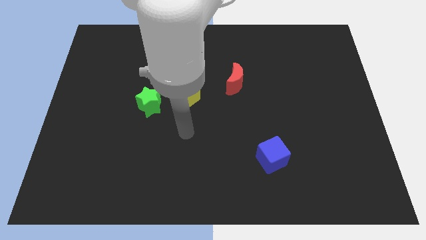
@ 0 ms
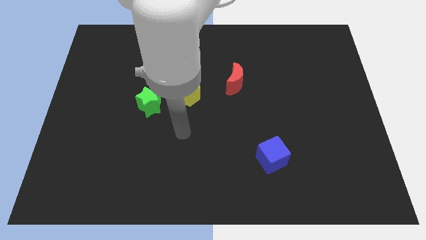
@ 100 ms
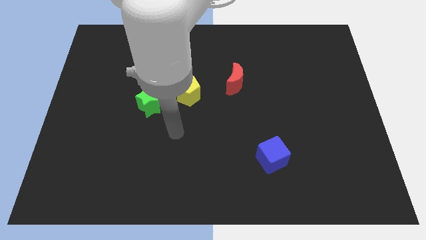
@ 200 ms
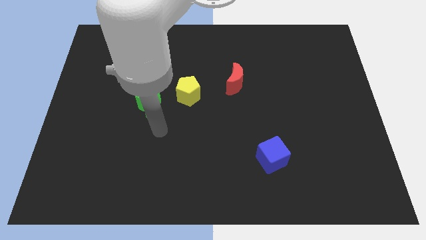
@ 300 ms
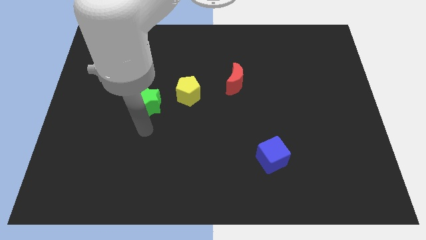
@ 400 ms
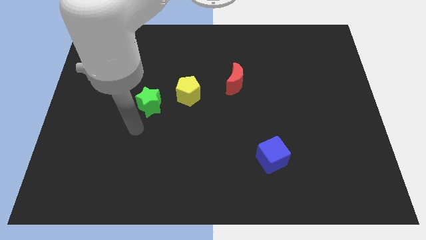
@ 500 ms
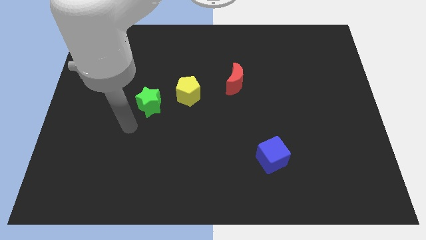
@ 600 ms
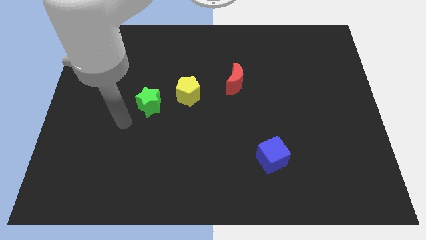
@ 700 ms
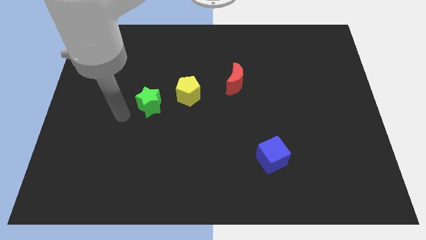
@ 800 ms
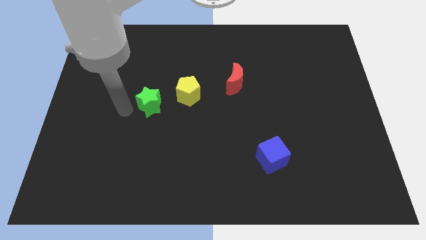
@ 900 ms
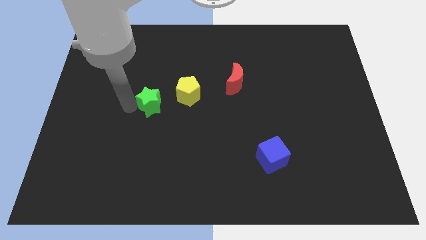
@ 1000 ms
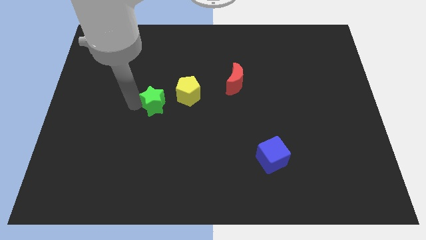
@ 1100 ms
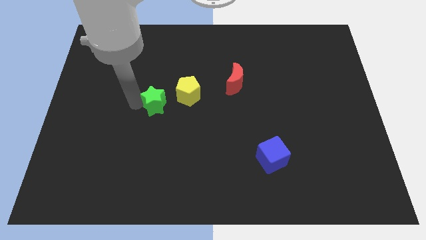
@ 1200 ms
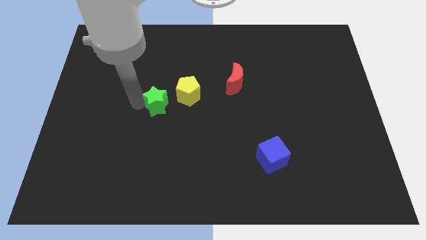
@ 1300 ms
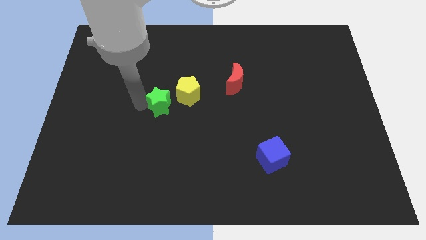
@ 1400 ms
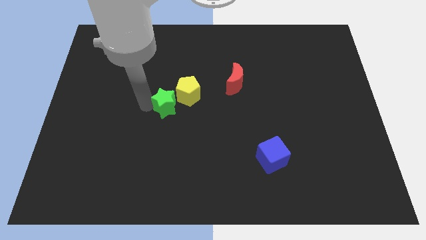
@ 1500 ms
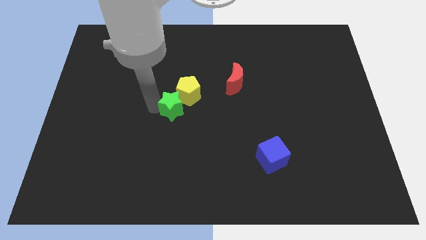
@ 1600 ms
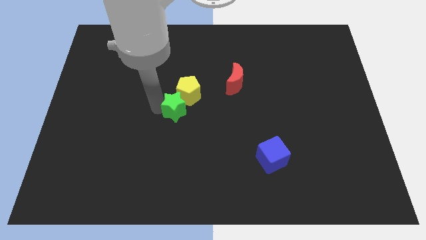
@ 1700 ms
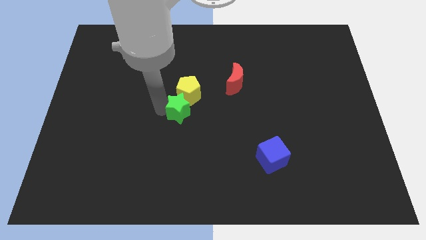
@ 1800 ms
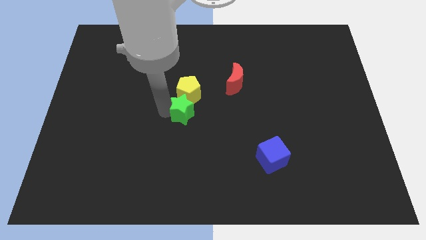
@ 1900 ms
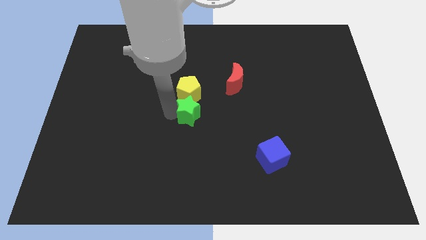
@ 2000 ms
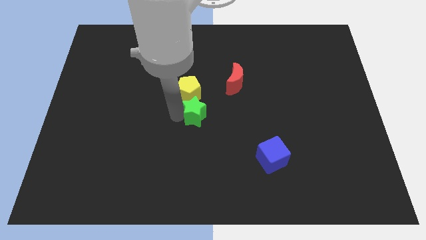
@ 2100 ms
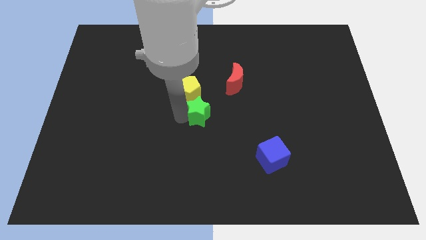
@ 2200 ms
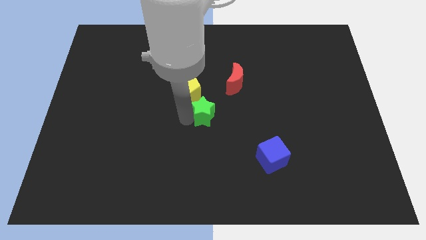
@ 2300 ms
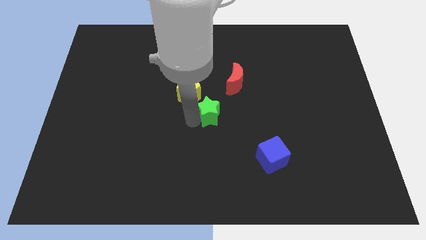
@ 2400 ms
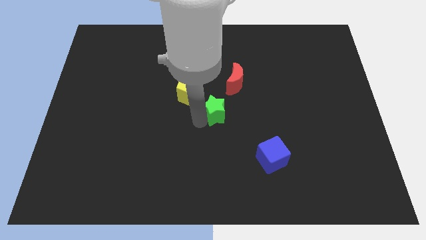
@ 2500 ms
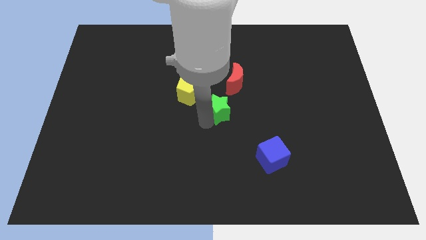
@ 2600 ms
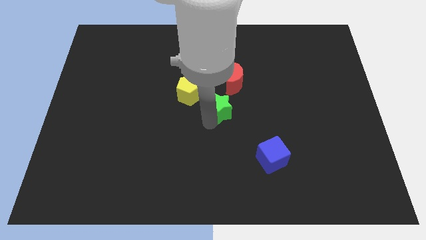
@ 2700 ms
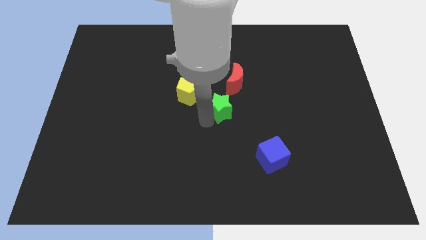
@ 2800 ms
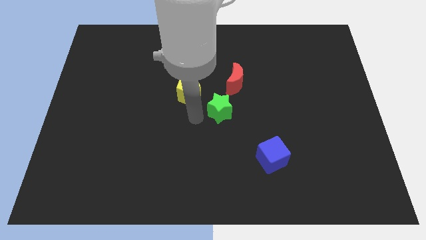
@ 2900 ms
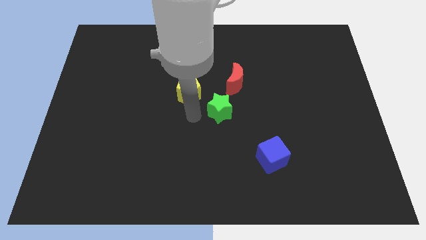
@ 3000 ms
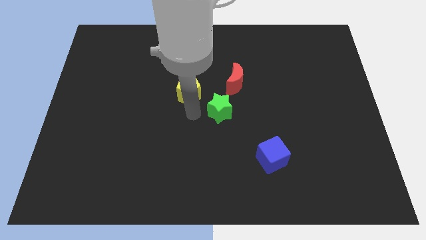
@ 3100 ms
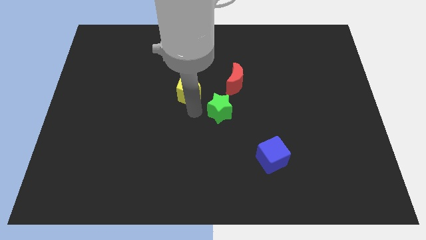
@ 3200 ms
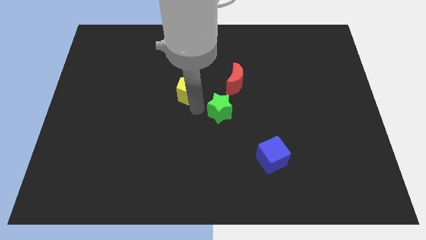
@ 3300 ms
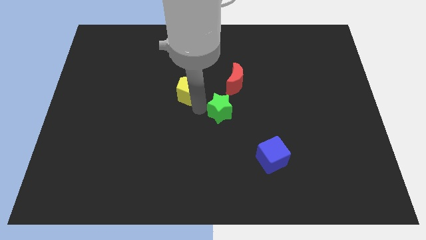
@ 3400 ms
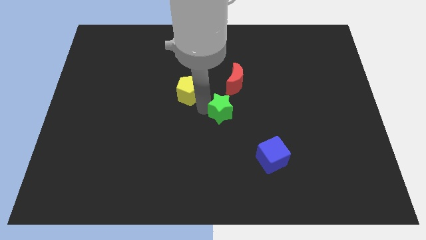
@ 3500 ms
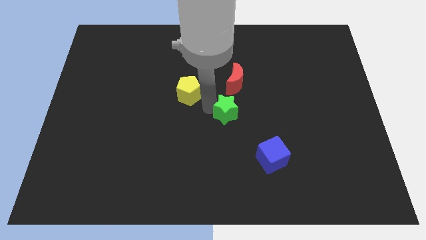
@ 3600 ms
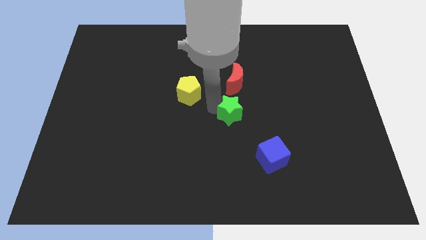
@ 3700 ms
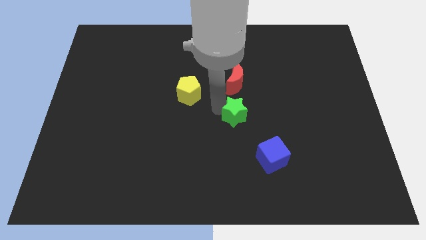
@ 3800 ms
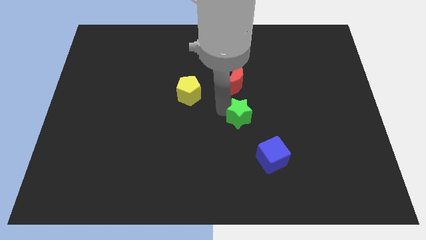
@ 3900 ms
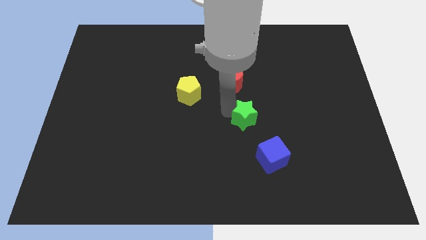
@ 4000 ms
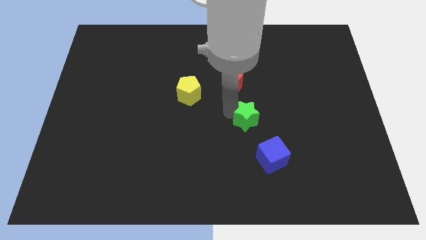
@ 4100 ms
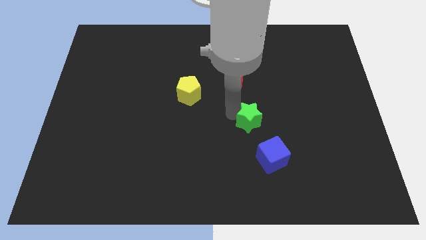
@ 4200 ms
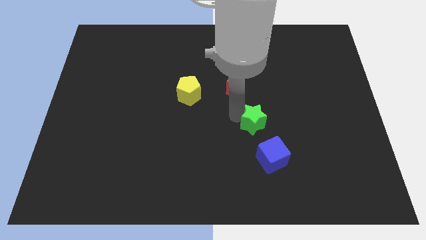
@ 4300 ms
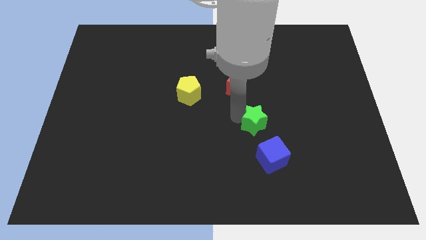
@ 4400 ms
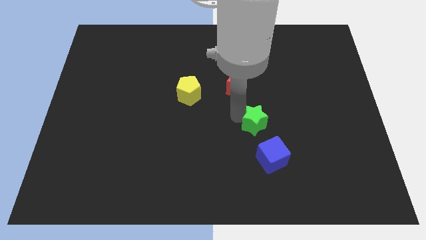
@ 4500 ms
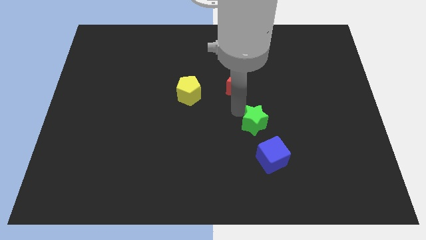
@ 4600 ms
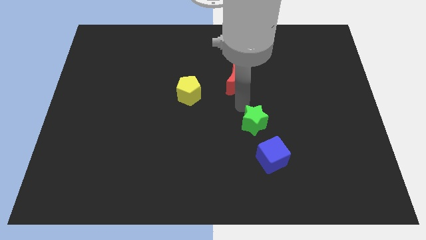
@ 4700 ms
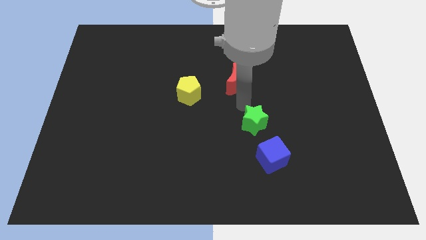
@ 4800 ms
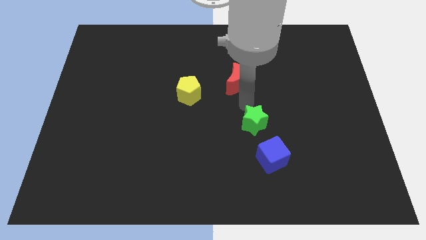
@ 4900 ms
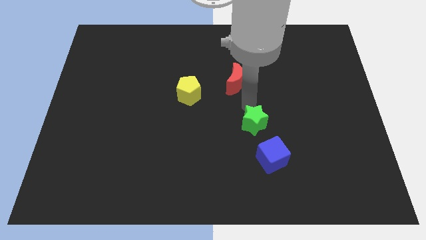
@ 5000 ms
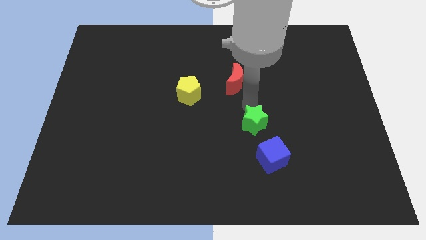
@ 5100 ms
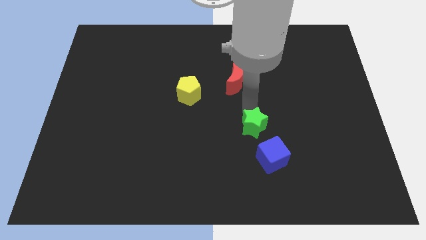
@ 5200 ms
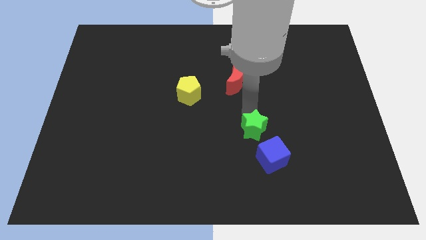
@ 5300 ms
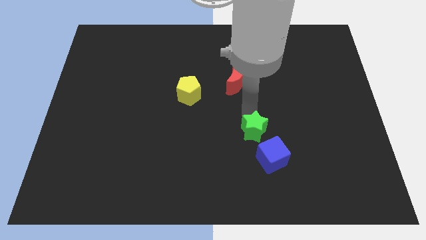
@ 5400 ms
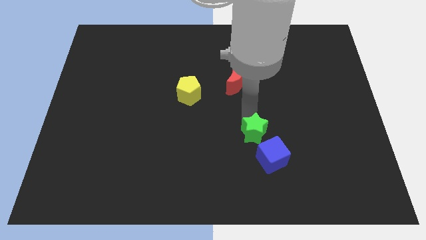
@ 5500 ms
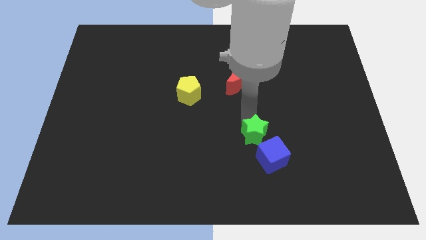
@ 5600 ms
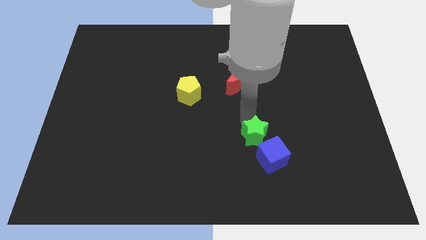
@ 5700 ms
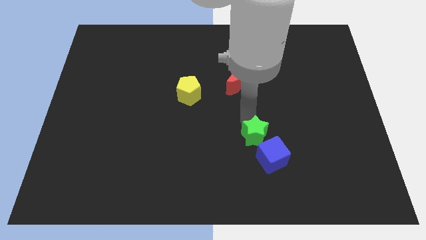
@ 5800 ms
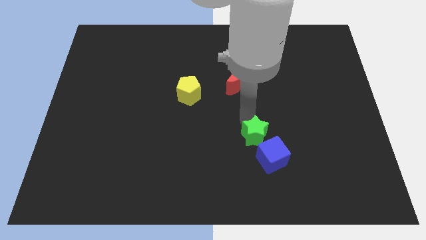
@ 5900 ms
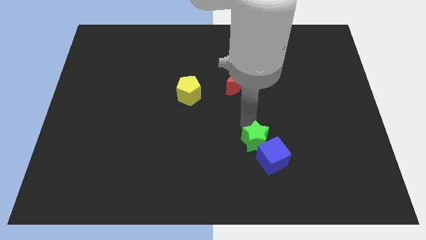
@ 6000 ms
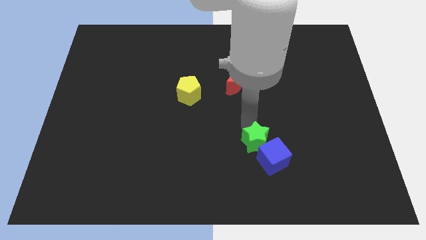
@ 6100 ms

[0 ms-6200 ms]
move the green star to the blue cube

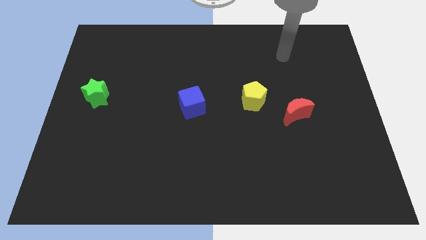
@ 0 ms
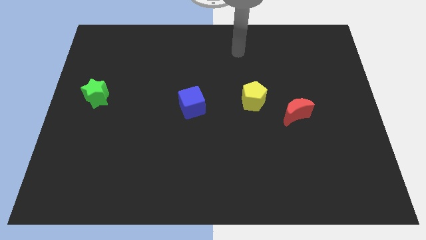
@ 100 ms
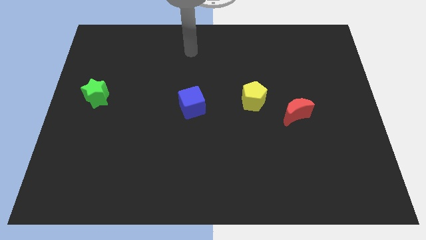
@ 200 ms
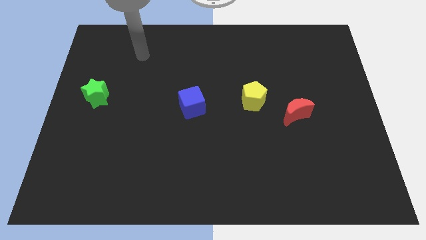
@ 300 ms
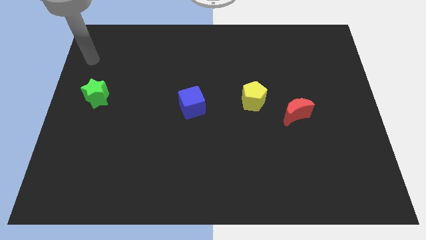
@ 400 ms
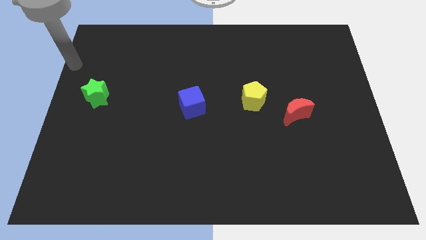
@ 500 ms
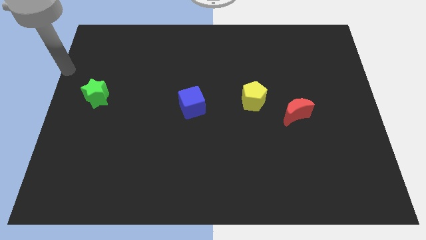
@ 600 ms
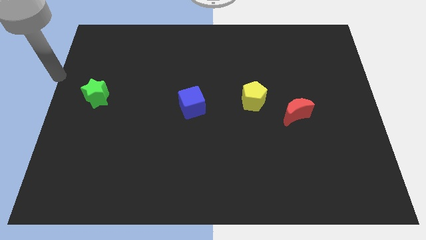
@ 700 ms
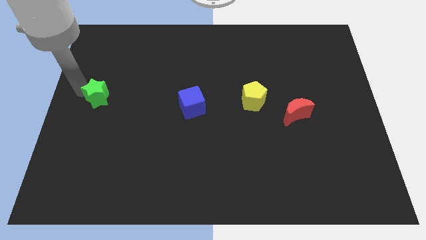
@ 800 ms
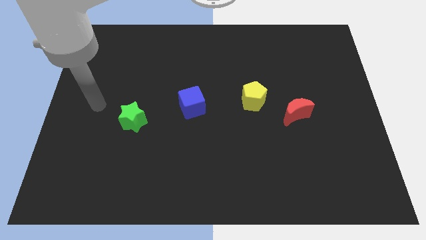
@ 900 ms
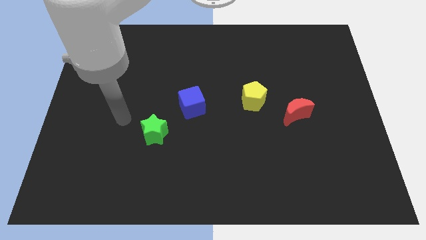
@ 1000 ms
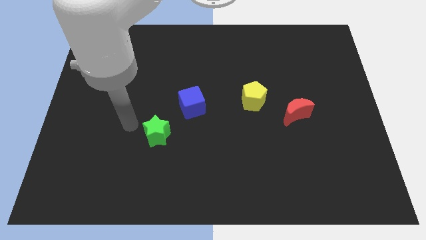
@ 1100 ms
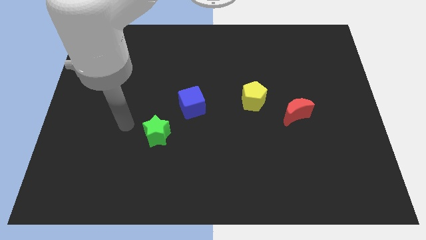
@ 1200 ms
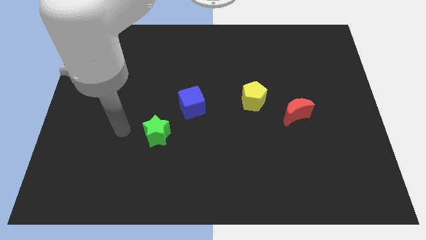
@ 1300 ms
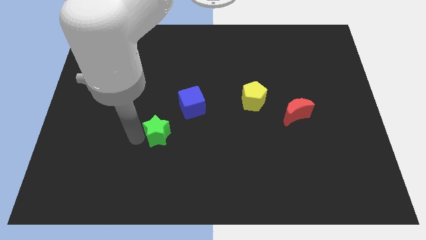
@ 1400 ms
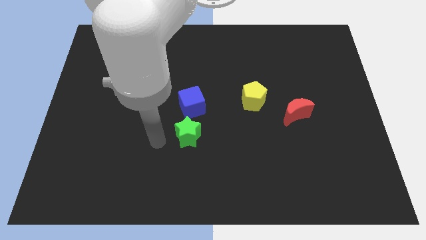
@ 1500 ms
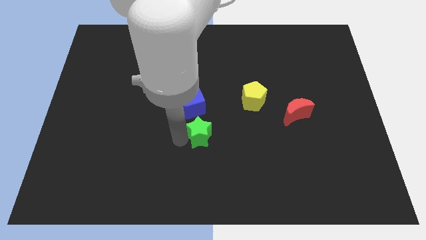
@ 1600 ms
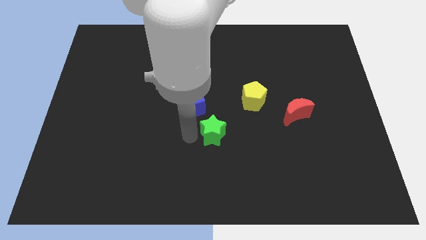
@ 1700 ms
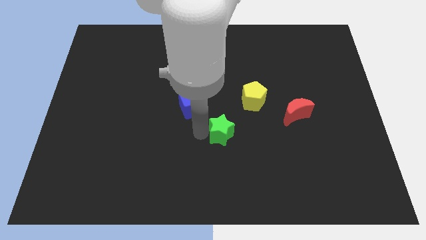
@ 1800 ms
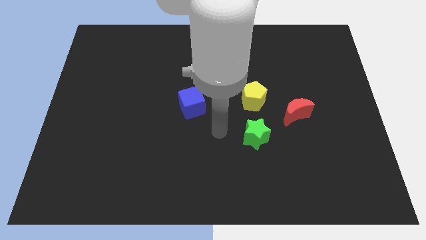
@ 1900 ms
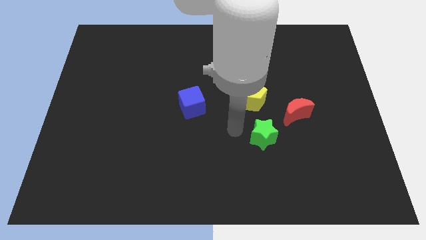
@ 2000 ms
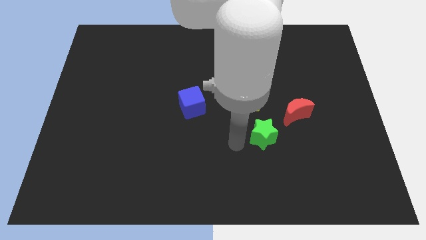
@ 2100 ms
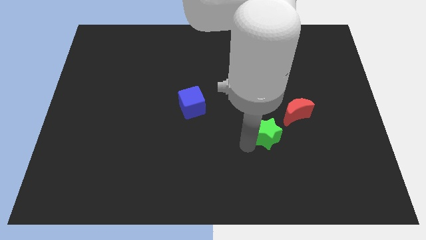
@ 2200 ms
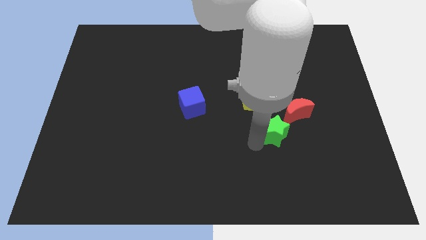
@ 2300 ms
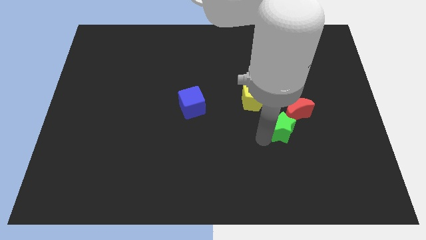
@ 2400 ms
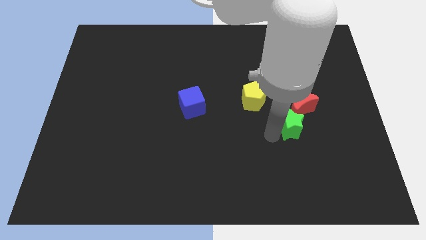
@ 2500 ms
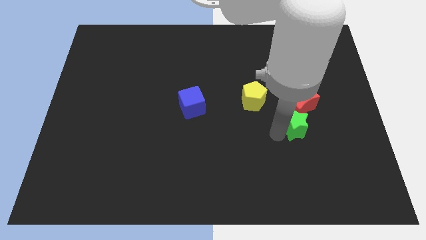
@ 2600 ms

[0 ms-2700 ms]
move the star next to the moon
